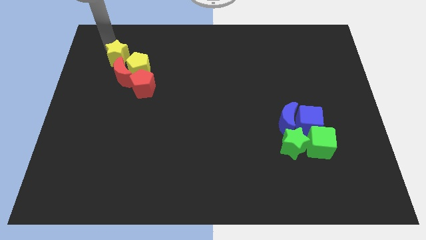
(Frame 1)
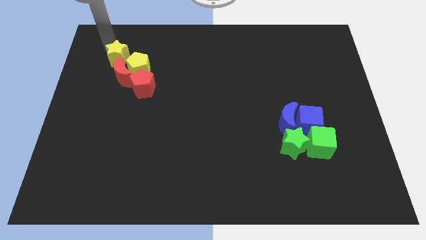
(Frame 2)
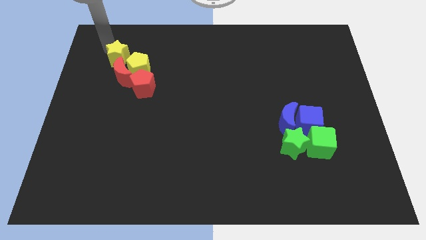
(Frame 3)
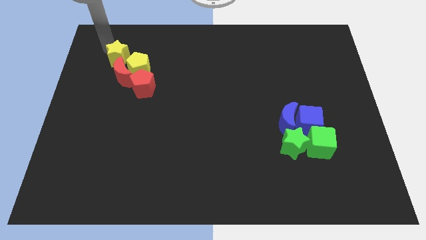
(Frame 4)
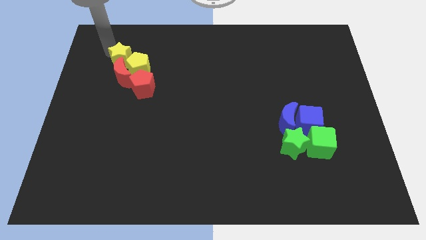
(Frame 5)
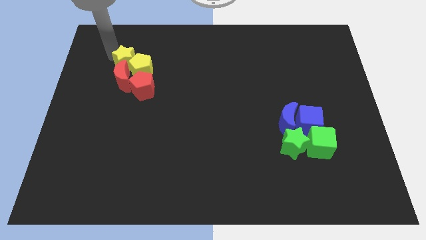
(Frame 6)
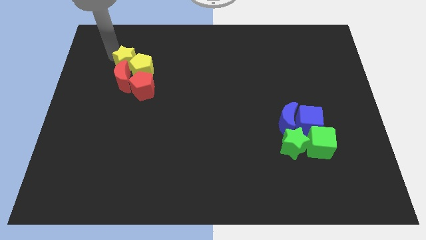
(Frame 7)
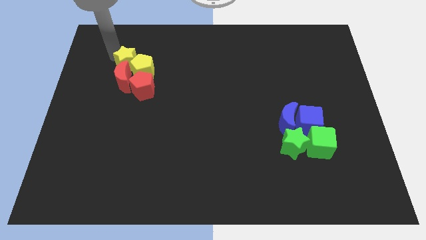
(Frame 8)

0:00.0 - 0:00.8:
push the yellow star into the yellow pentagon

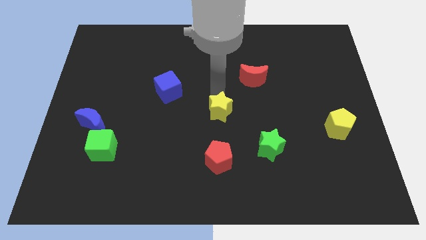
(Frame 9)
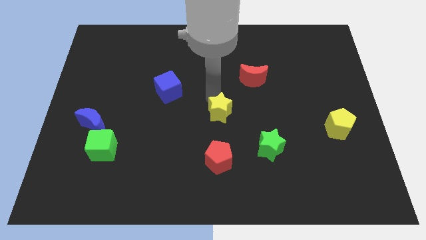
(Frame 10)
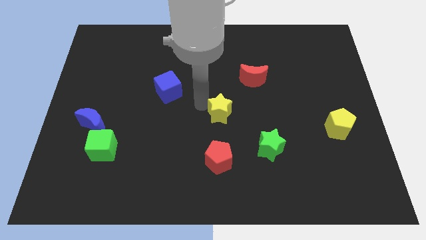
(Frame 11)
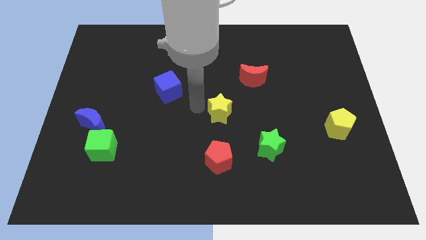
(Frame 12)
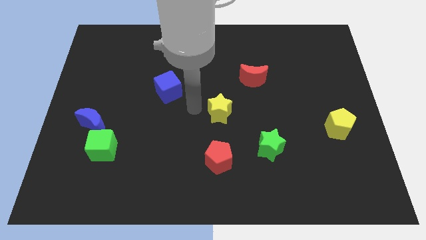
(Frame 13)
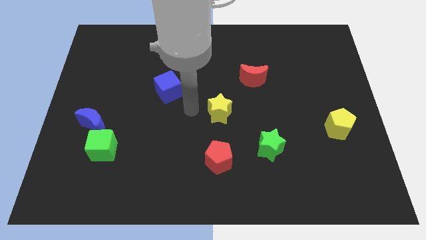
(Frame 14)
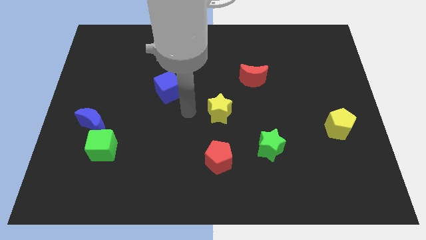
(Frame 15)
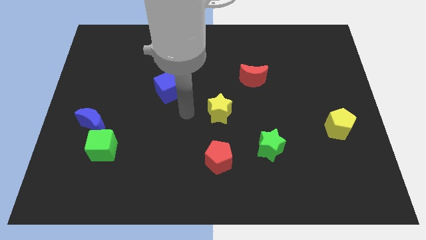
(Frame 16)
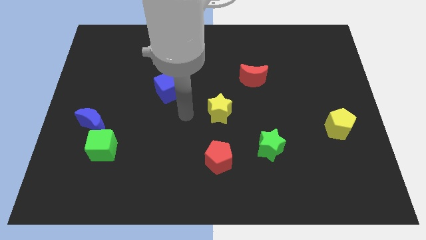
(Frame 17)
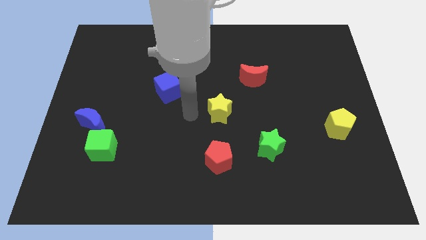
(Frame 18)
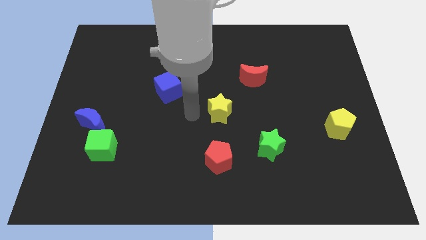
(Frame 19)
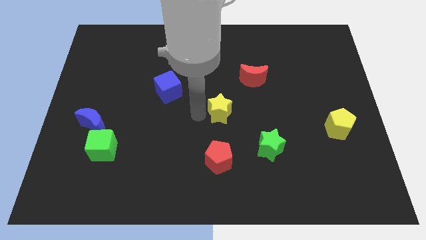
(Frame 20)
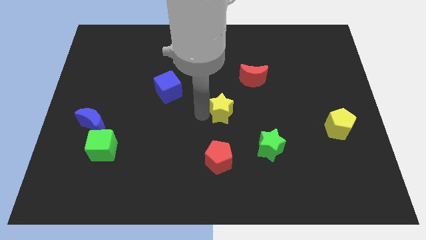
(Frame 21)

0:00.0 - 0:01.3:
slightly push the yellow star towards the right of the board

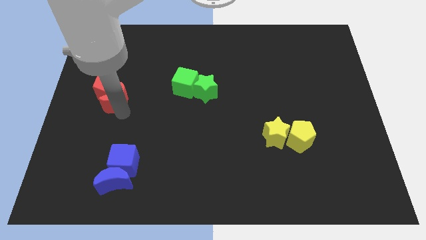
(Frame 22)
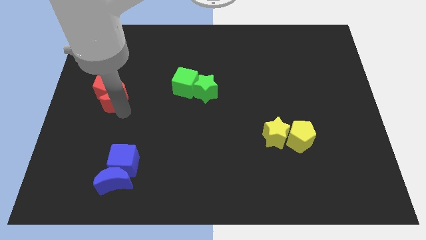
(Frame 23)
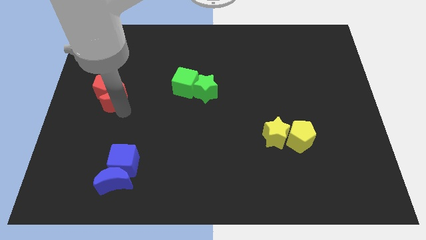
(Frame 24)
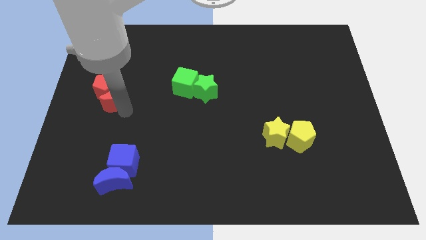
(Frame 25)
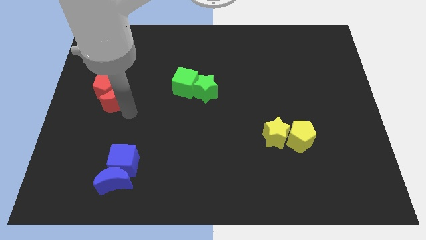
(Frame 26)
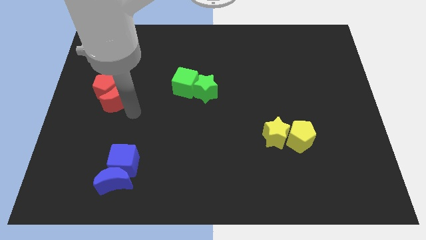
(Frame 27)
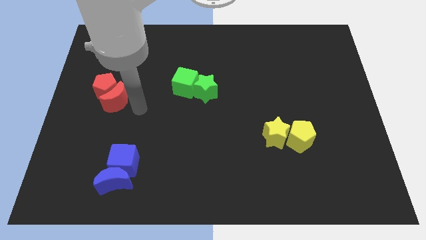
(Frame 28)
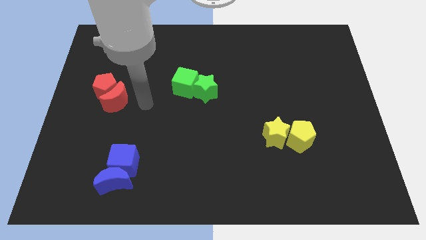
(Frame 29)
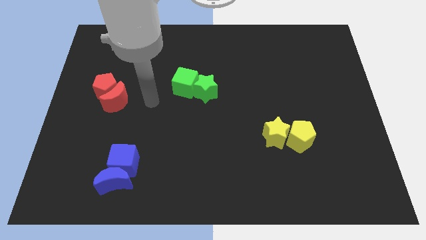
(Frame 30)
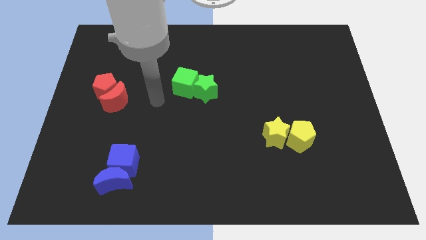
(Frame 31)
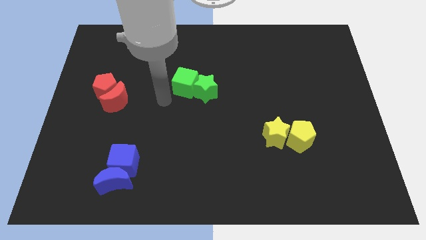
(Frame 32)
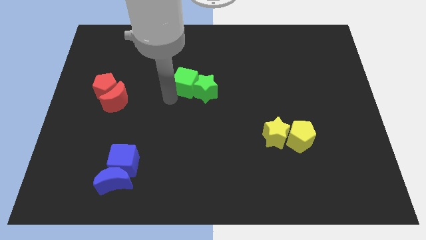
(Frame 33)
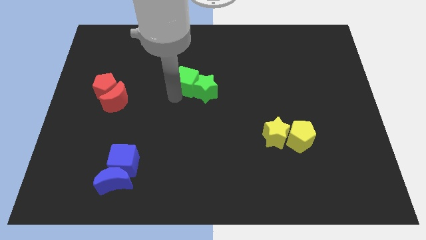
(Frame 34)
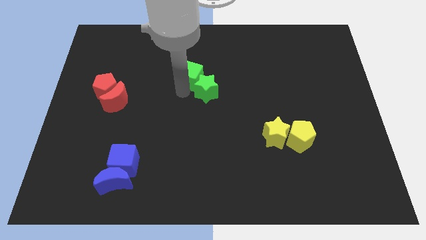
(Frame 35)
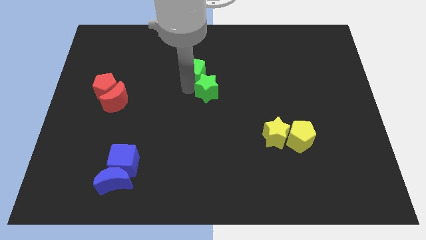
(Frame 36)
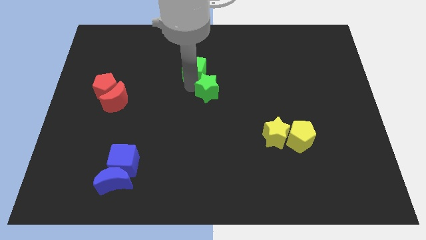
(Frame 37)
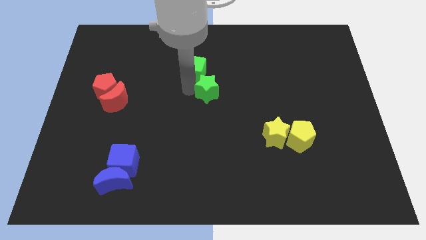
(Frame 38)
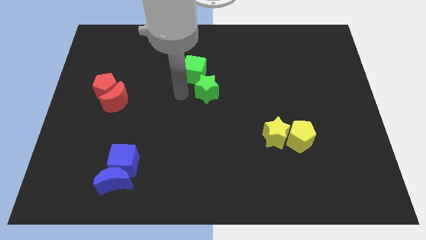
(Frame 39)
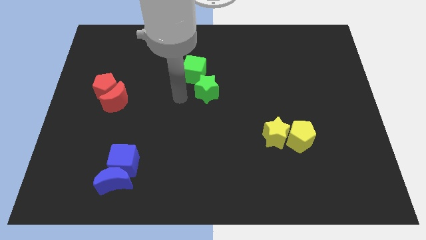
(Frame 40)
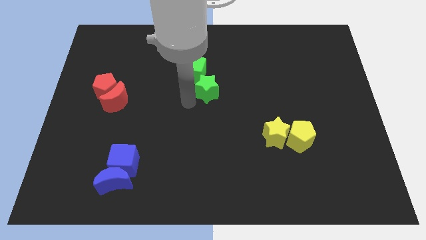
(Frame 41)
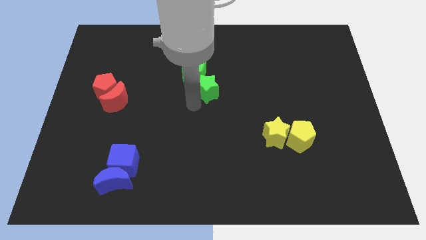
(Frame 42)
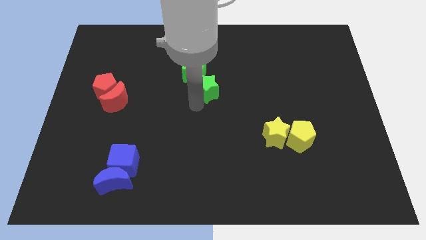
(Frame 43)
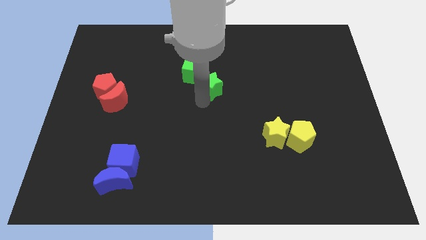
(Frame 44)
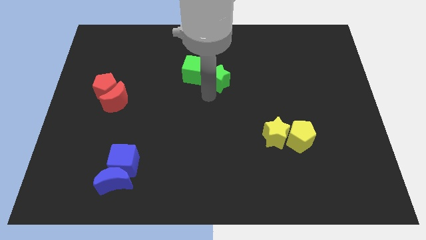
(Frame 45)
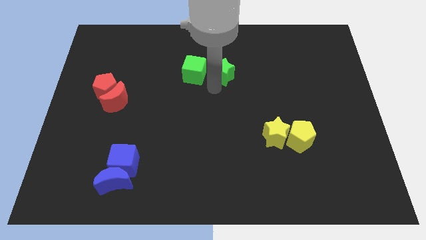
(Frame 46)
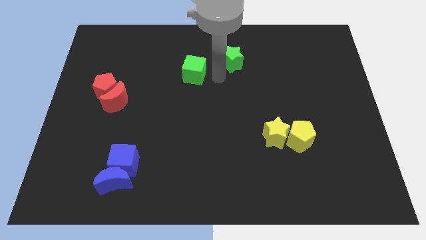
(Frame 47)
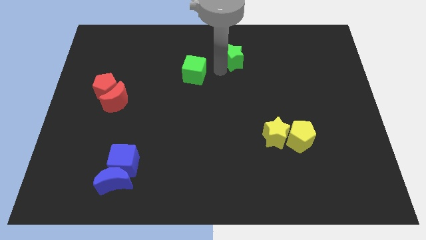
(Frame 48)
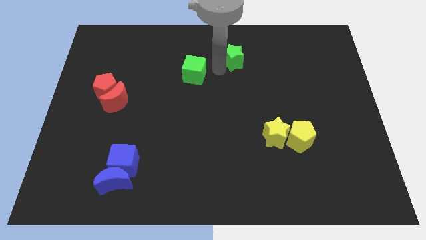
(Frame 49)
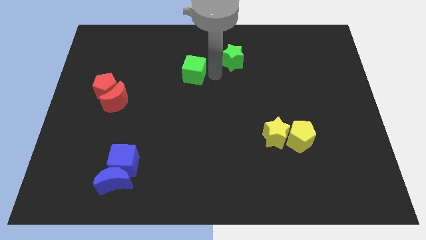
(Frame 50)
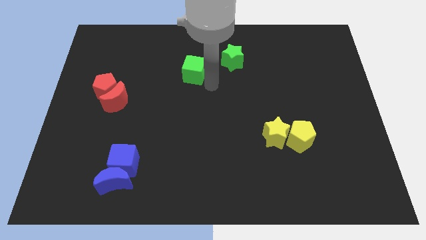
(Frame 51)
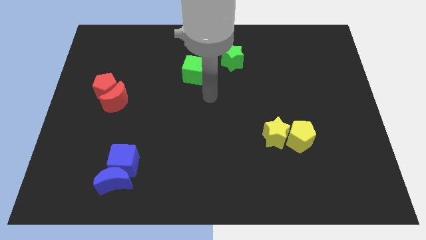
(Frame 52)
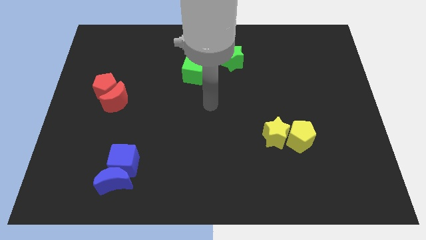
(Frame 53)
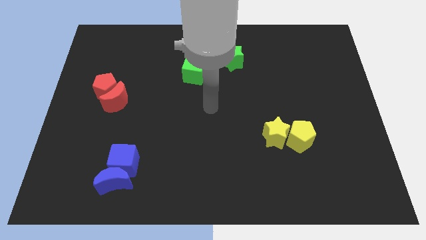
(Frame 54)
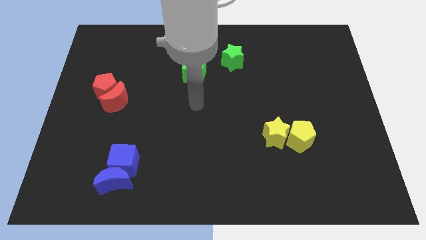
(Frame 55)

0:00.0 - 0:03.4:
separate the green star from the green cube

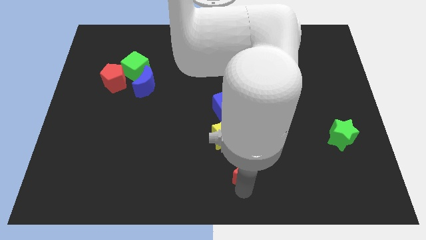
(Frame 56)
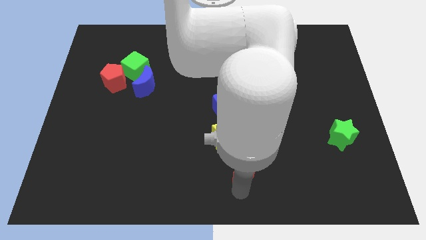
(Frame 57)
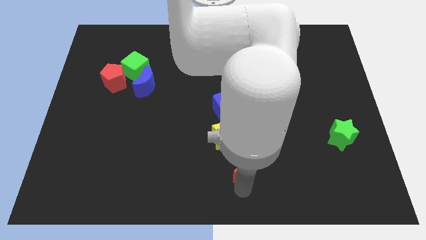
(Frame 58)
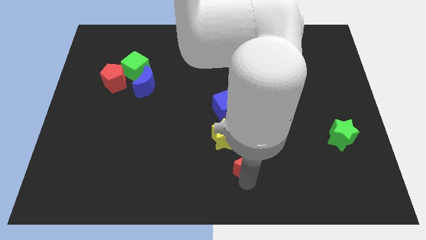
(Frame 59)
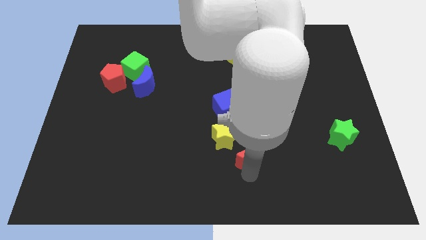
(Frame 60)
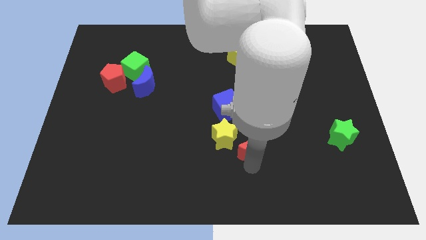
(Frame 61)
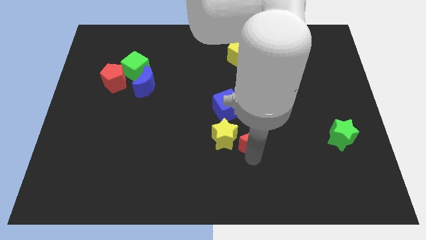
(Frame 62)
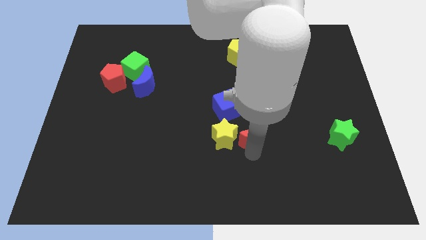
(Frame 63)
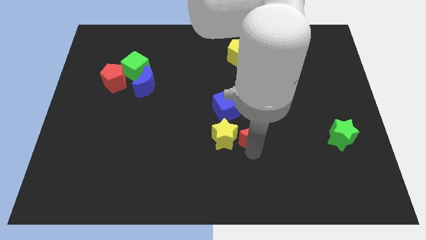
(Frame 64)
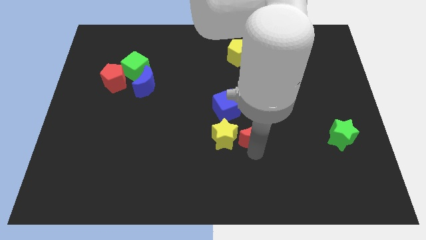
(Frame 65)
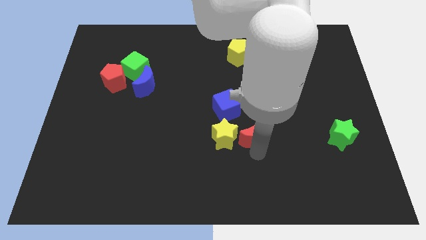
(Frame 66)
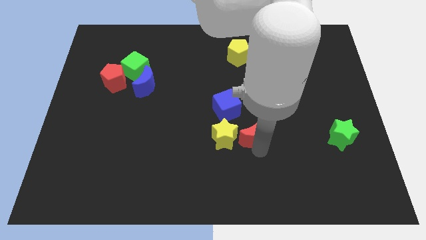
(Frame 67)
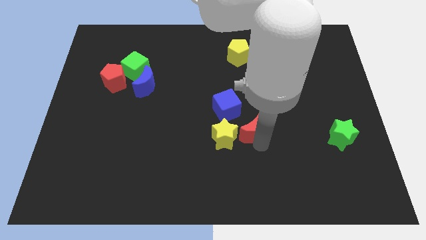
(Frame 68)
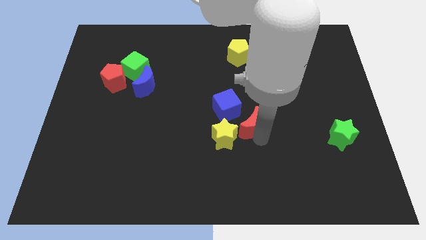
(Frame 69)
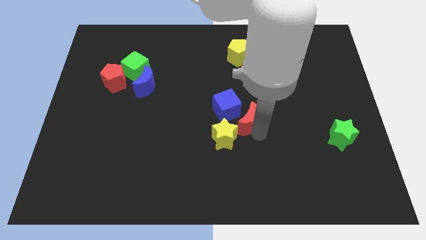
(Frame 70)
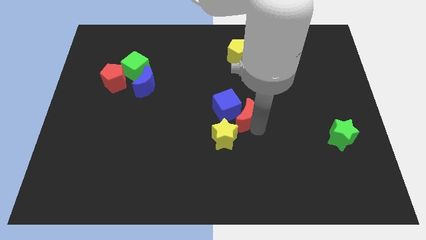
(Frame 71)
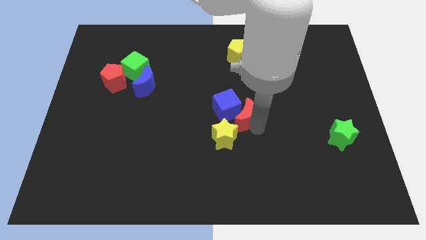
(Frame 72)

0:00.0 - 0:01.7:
move the red moon slightly upwards

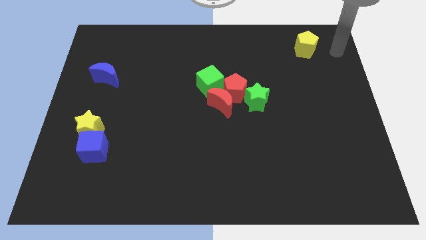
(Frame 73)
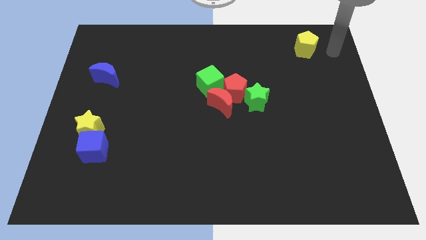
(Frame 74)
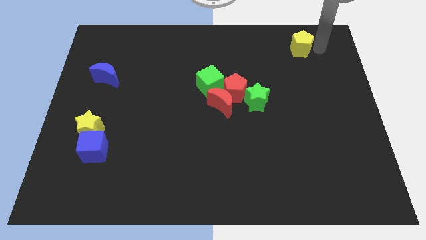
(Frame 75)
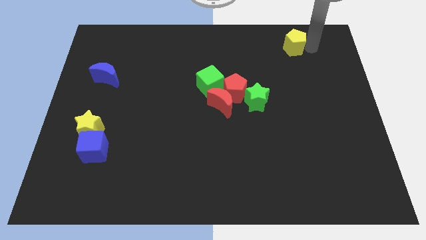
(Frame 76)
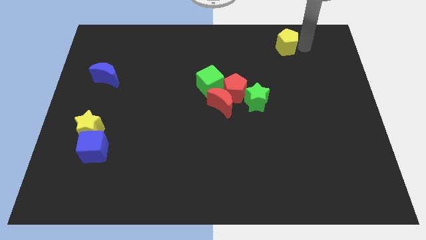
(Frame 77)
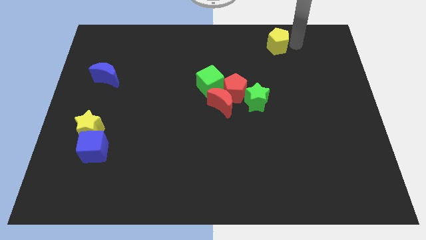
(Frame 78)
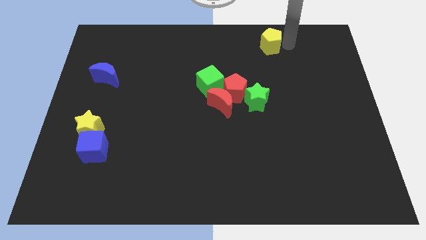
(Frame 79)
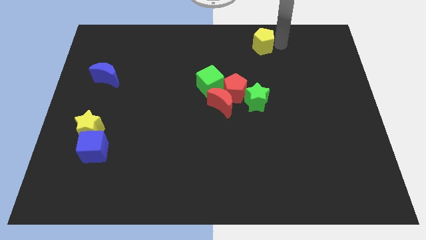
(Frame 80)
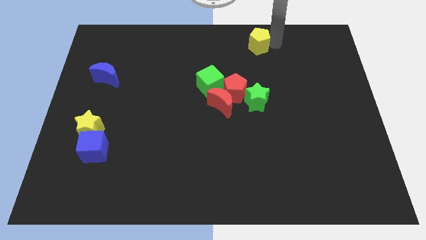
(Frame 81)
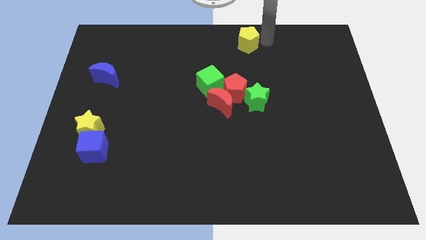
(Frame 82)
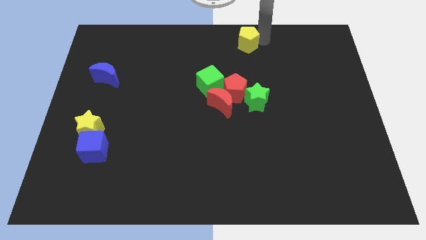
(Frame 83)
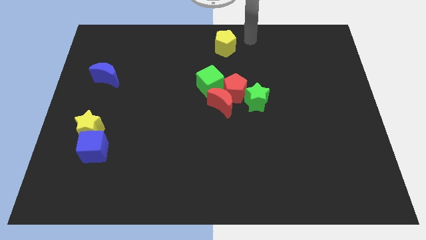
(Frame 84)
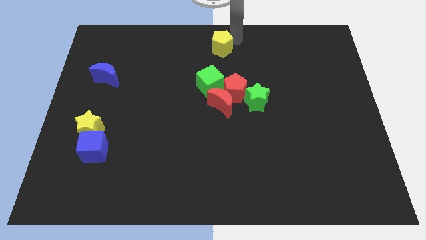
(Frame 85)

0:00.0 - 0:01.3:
move the yellow pentagon to the top center

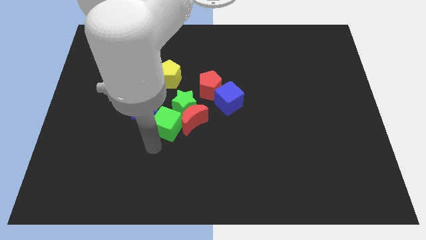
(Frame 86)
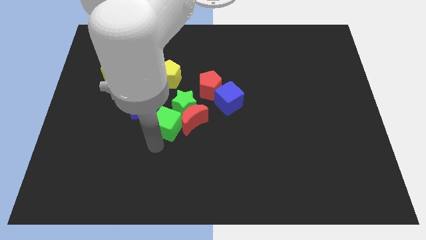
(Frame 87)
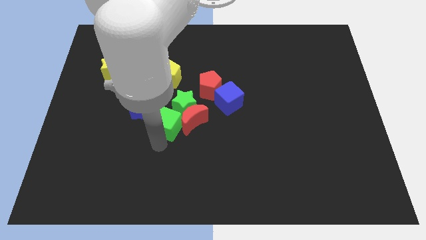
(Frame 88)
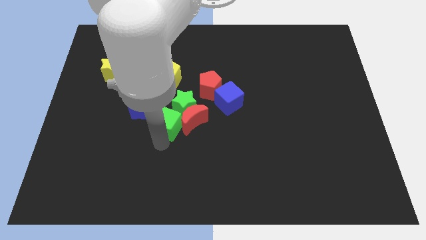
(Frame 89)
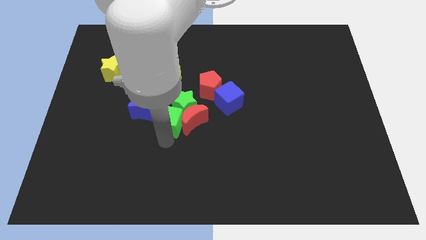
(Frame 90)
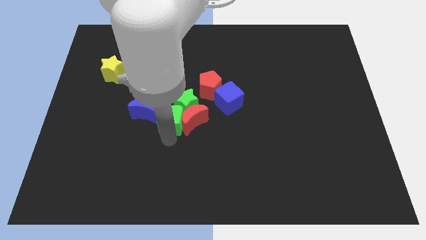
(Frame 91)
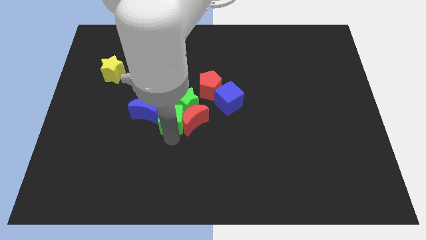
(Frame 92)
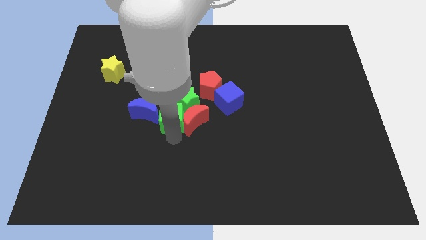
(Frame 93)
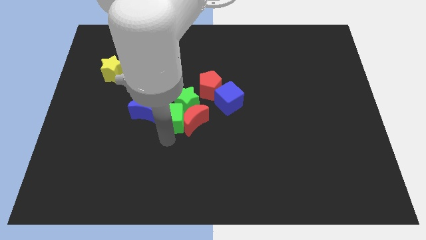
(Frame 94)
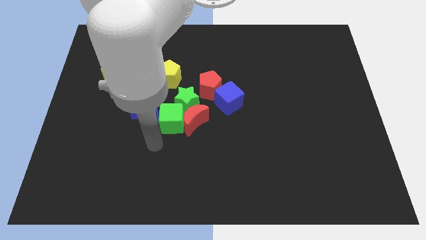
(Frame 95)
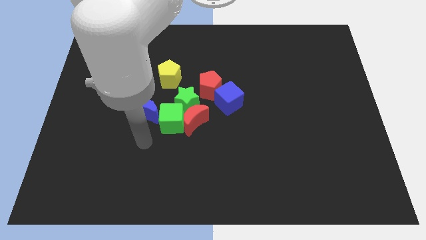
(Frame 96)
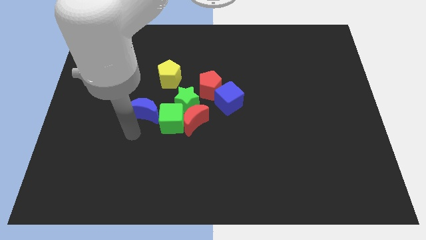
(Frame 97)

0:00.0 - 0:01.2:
push the green cube into the green star
